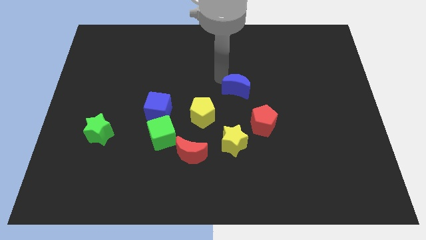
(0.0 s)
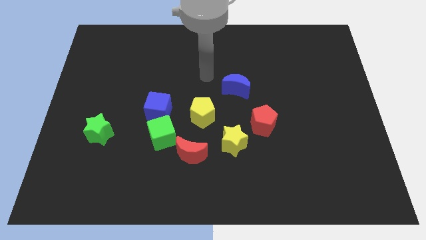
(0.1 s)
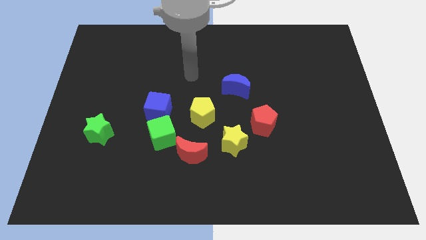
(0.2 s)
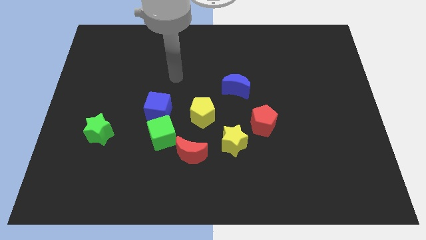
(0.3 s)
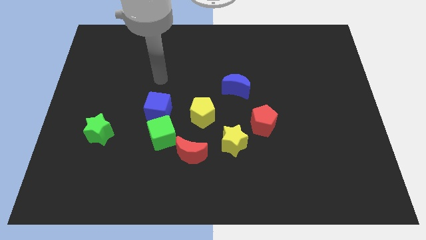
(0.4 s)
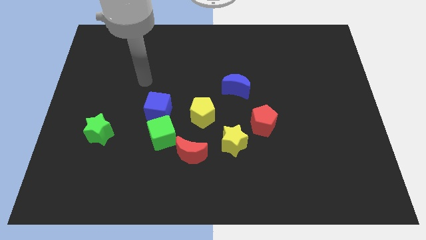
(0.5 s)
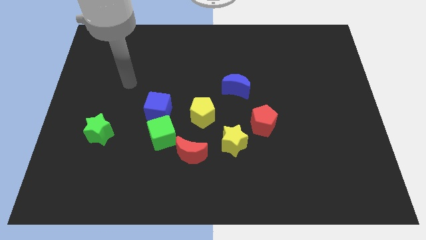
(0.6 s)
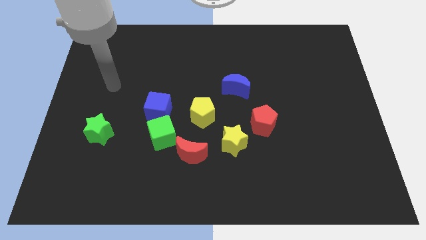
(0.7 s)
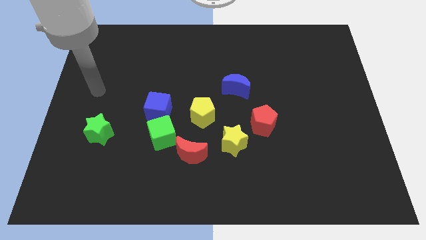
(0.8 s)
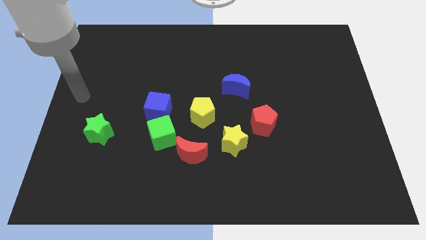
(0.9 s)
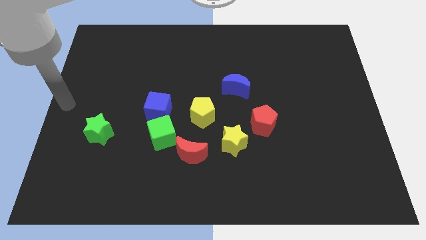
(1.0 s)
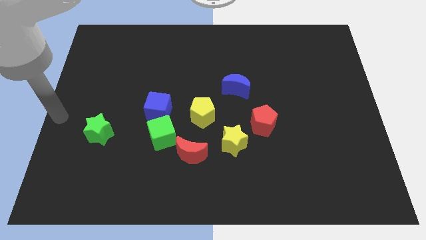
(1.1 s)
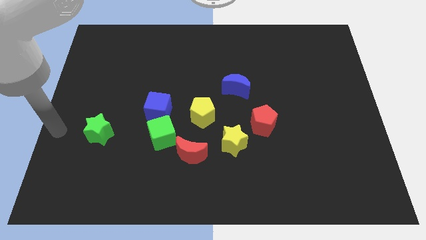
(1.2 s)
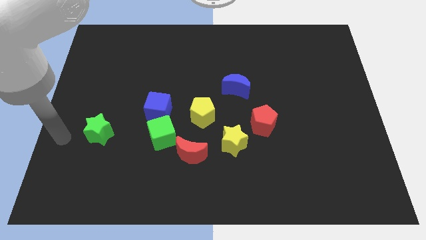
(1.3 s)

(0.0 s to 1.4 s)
move your arm towards the green star

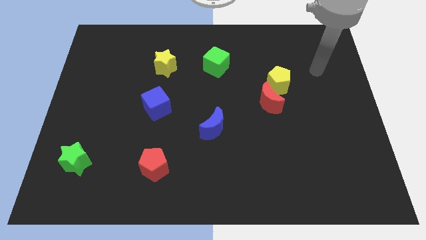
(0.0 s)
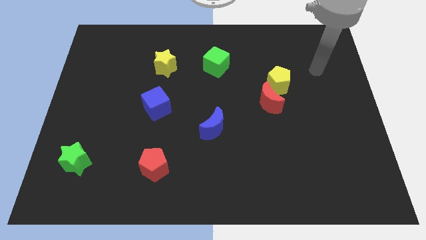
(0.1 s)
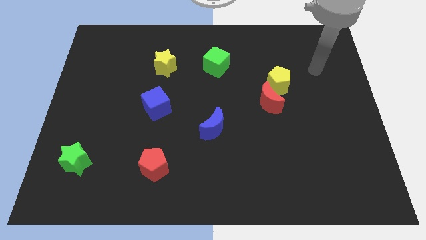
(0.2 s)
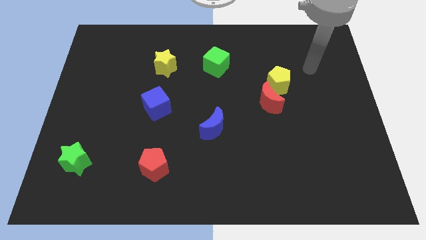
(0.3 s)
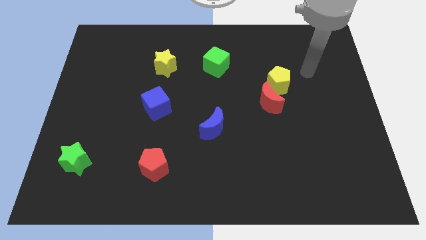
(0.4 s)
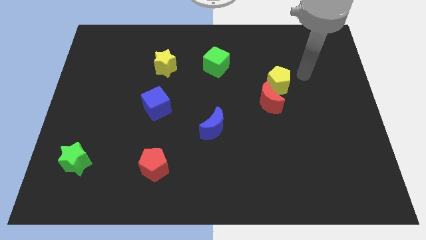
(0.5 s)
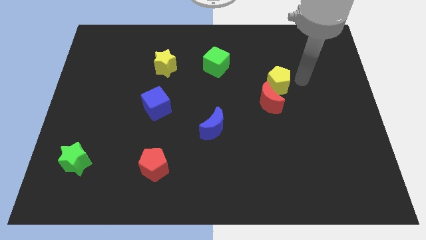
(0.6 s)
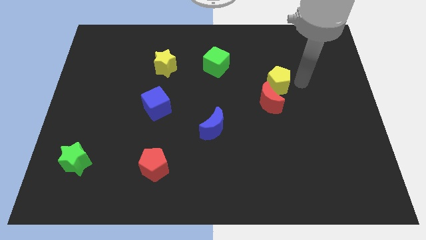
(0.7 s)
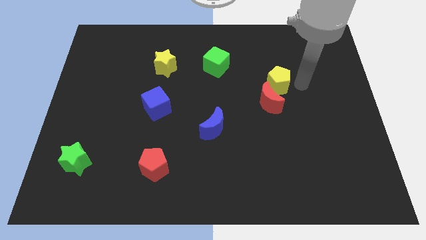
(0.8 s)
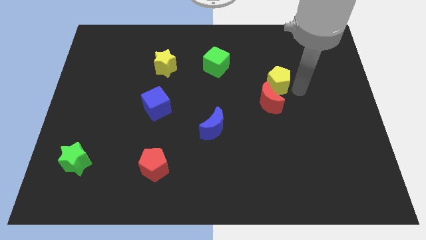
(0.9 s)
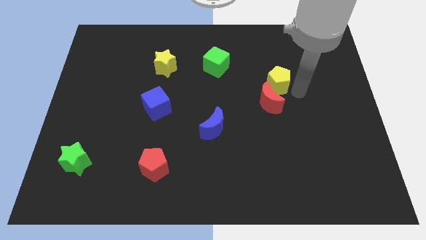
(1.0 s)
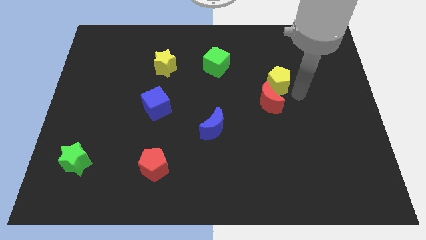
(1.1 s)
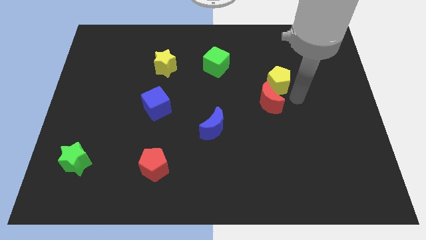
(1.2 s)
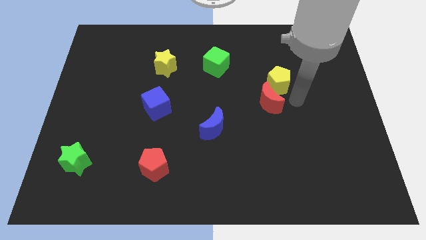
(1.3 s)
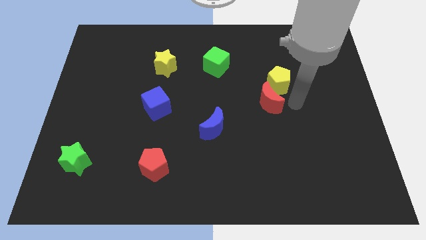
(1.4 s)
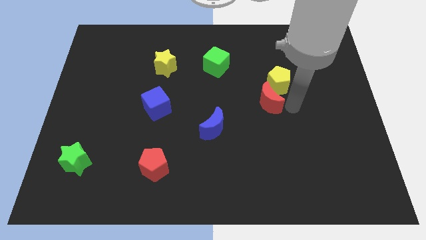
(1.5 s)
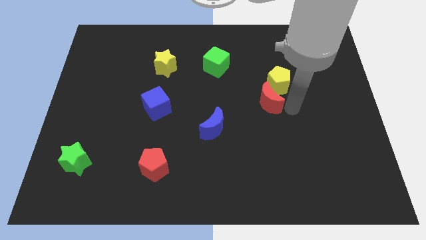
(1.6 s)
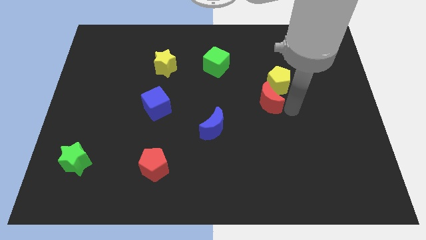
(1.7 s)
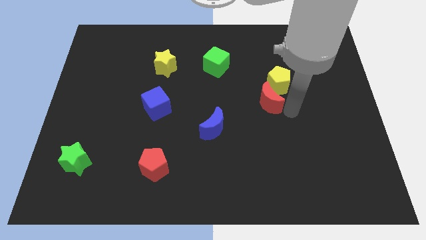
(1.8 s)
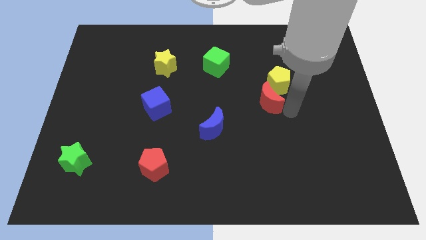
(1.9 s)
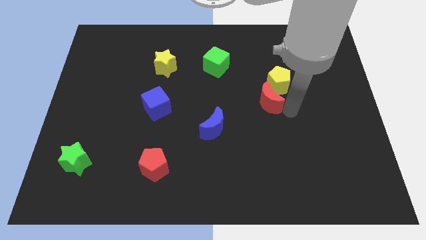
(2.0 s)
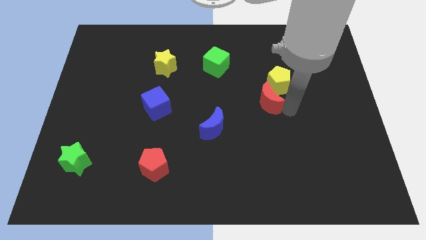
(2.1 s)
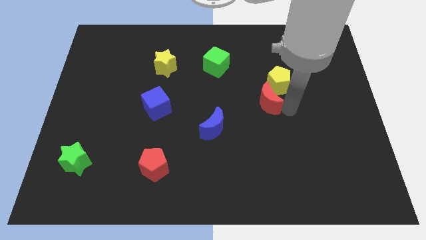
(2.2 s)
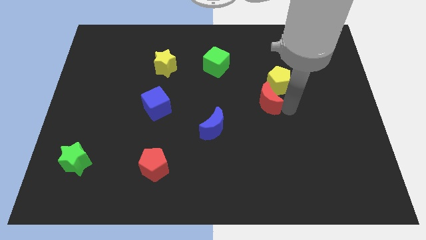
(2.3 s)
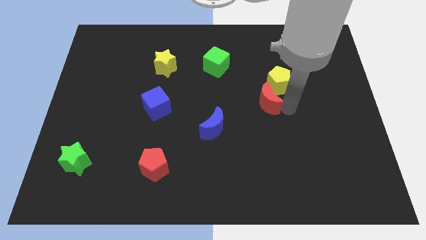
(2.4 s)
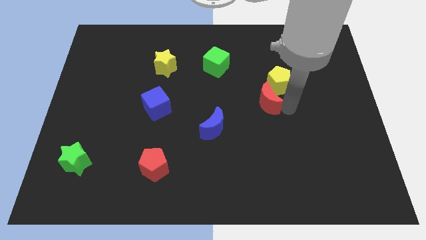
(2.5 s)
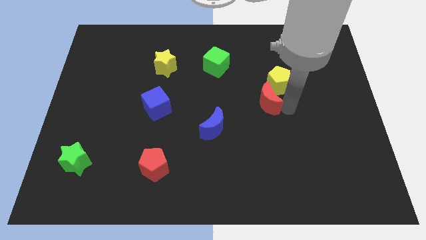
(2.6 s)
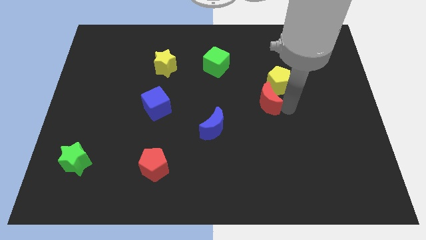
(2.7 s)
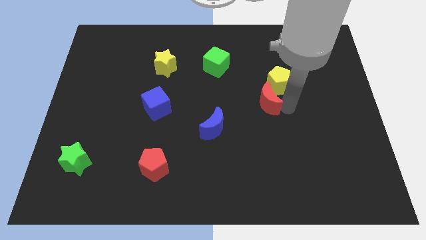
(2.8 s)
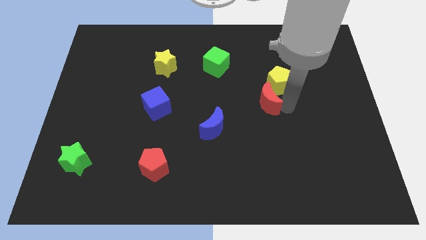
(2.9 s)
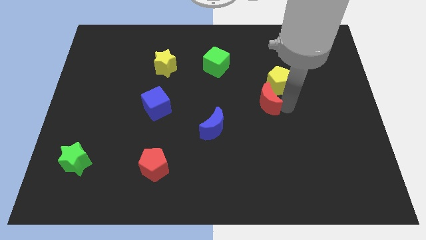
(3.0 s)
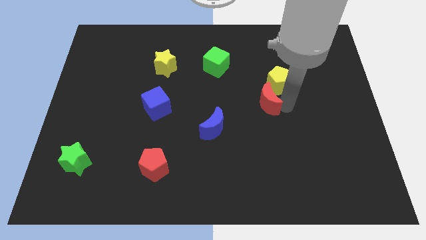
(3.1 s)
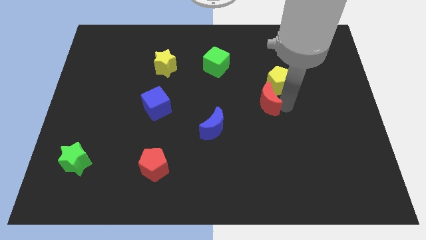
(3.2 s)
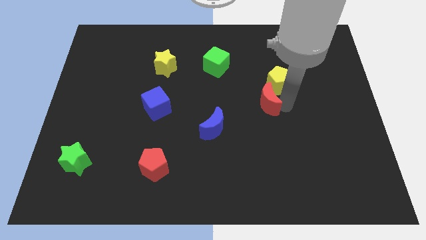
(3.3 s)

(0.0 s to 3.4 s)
point your arm to the right side of red moon

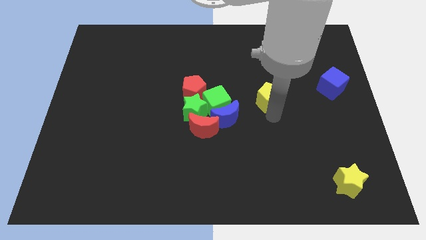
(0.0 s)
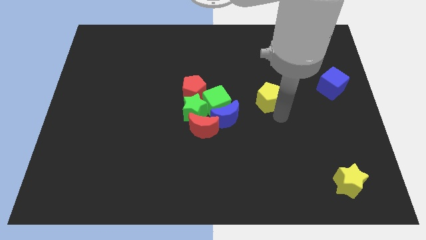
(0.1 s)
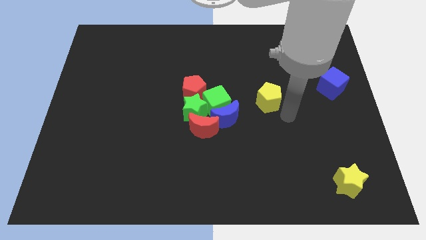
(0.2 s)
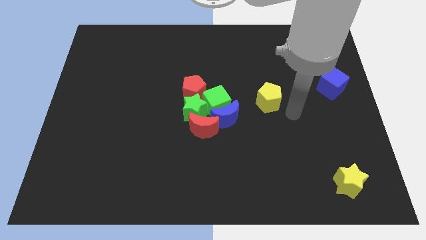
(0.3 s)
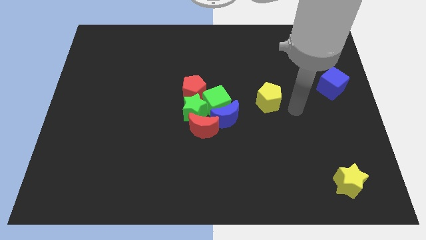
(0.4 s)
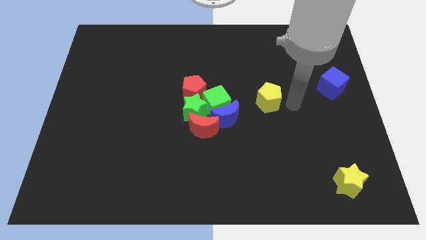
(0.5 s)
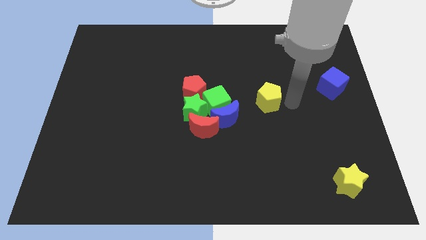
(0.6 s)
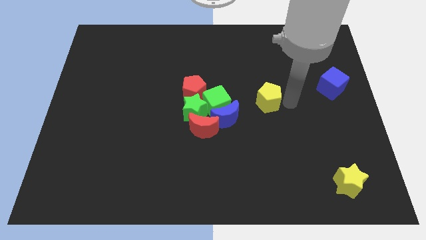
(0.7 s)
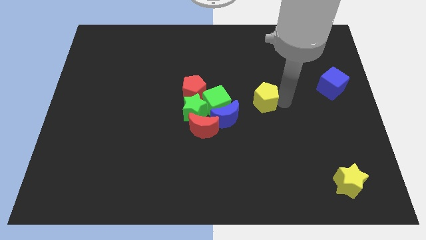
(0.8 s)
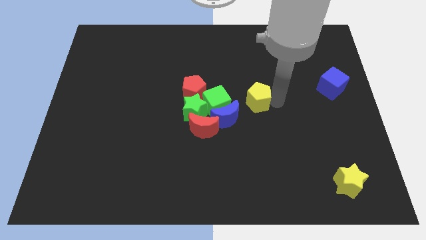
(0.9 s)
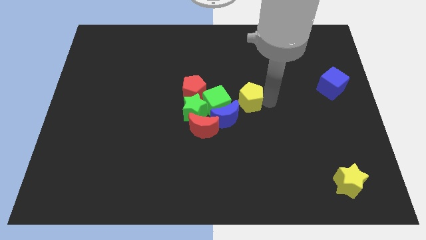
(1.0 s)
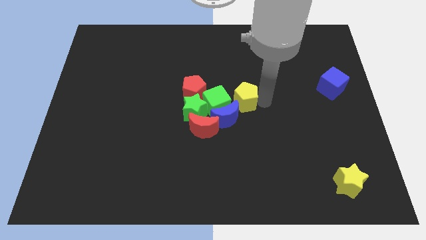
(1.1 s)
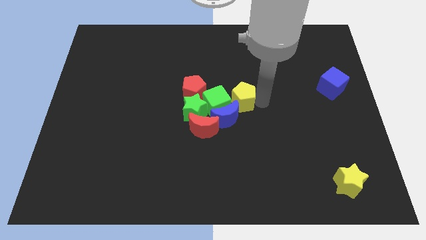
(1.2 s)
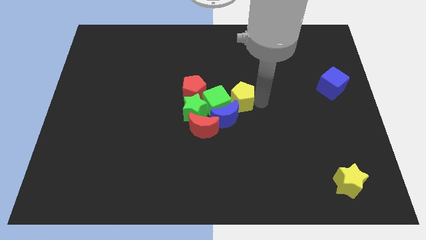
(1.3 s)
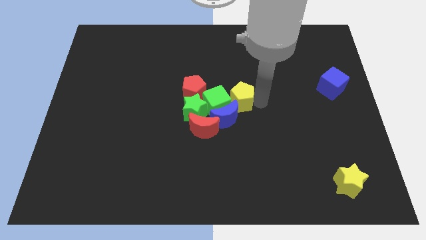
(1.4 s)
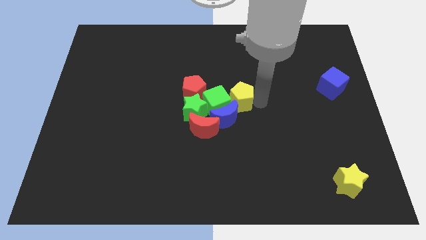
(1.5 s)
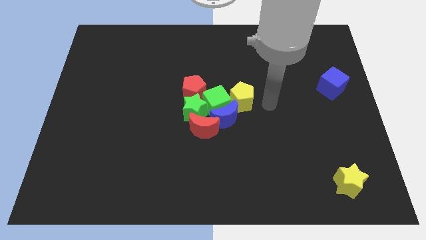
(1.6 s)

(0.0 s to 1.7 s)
push the yellow pentagon into green cube

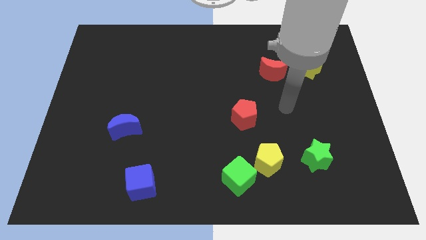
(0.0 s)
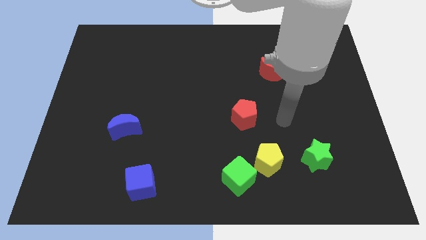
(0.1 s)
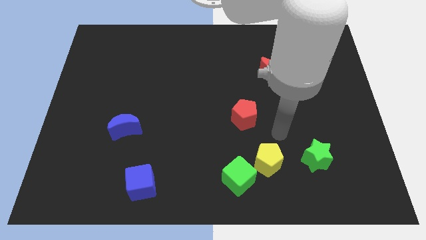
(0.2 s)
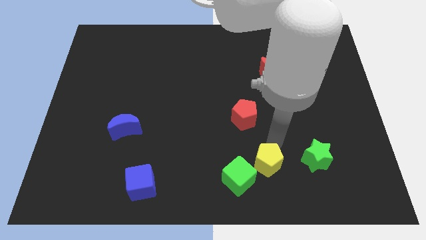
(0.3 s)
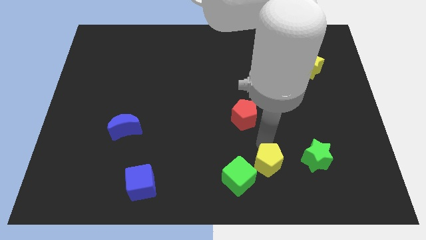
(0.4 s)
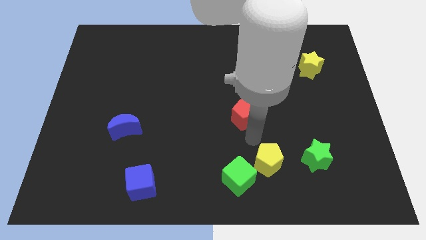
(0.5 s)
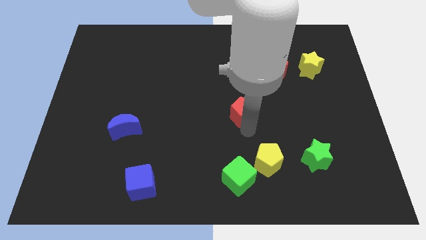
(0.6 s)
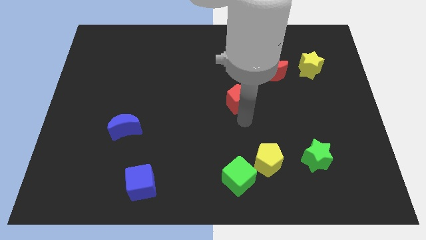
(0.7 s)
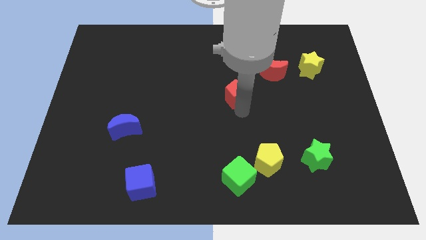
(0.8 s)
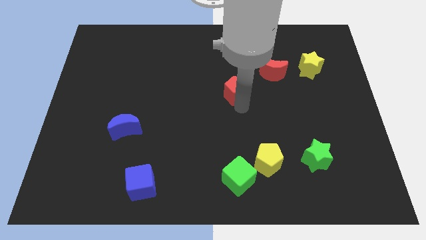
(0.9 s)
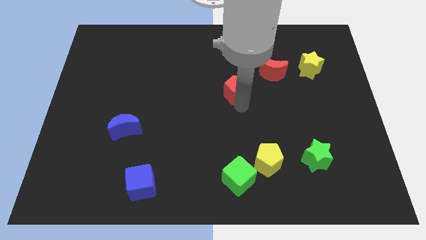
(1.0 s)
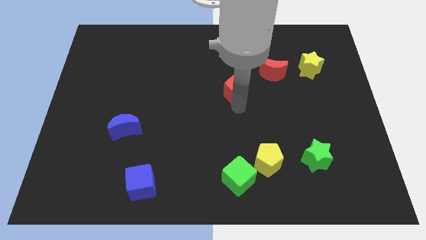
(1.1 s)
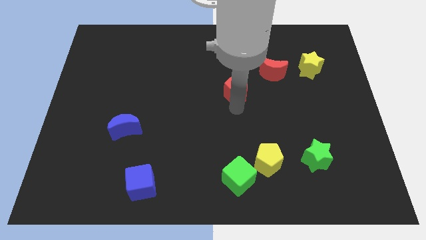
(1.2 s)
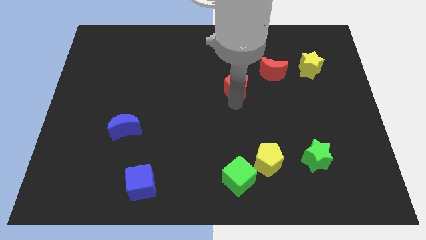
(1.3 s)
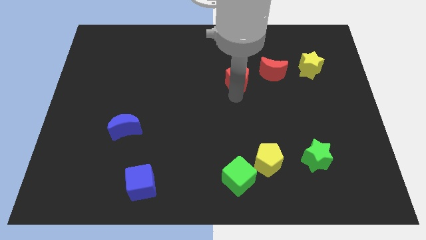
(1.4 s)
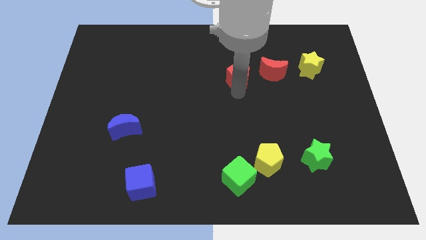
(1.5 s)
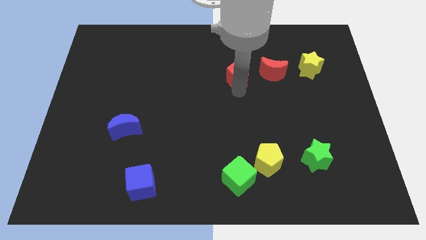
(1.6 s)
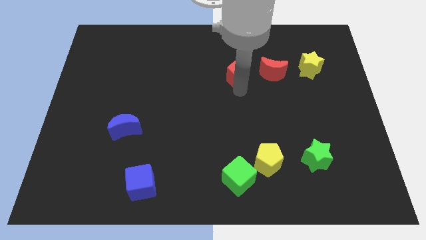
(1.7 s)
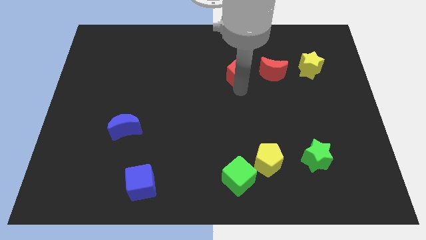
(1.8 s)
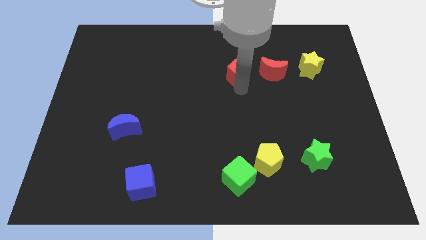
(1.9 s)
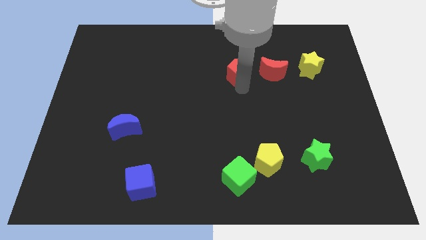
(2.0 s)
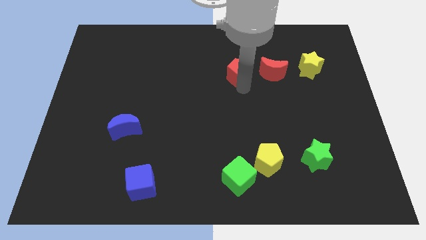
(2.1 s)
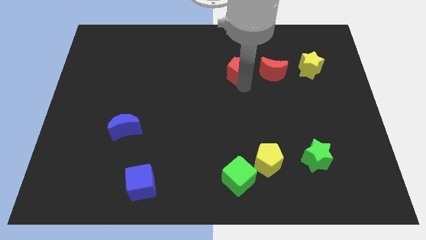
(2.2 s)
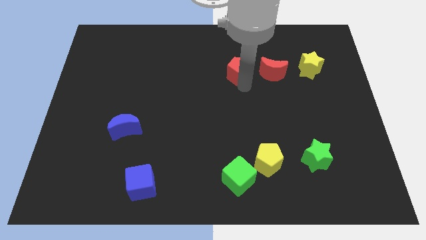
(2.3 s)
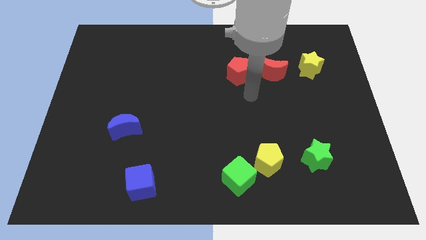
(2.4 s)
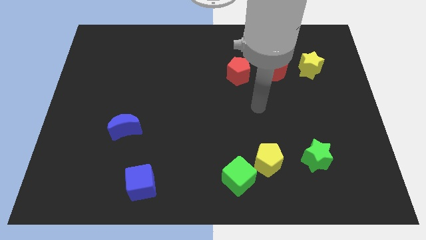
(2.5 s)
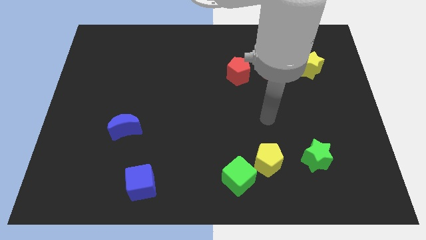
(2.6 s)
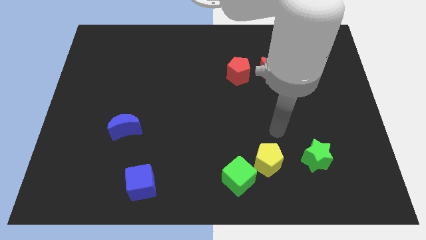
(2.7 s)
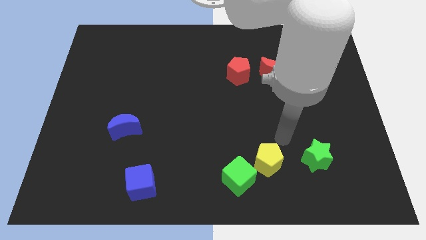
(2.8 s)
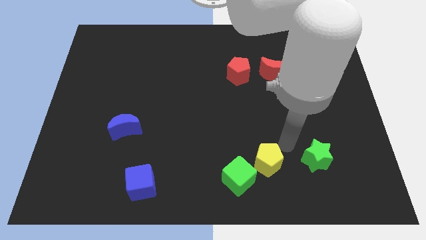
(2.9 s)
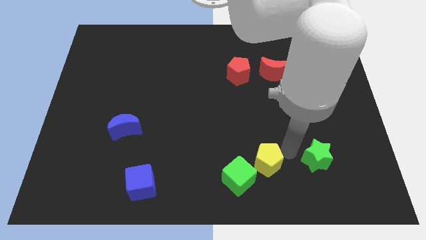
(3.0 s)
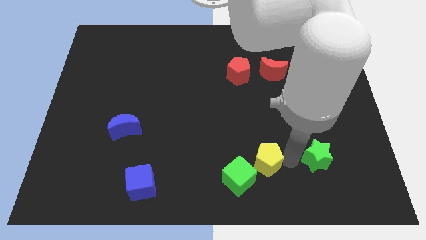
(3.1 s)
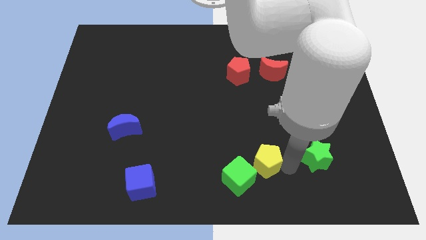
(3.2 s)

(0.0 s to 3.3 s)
push the red pentagon to the red crescent
